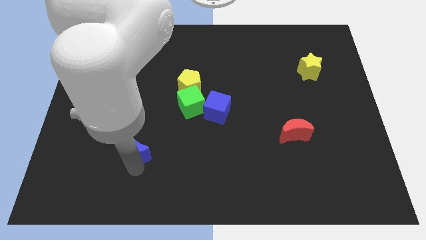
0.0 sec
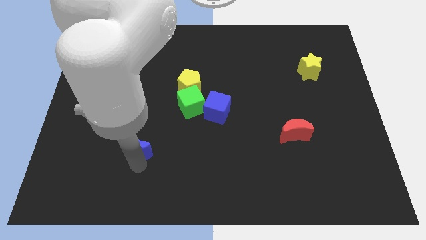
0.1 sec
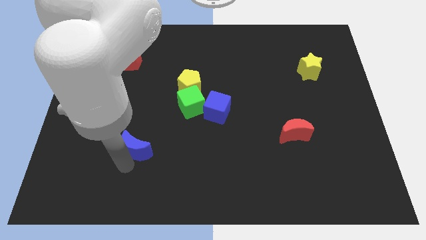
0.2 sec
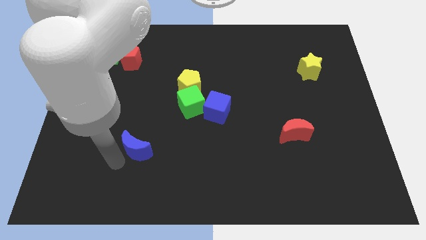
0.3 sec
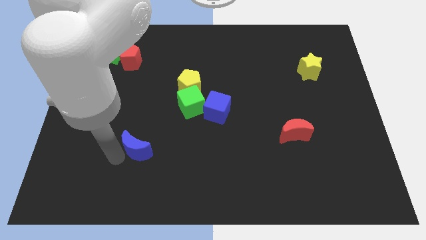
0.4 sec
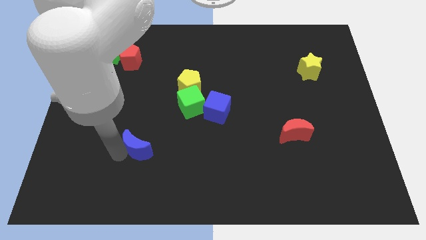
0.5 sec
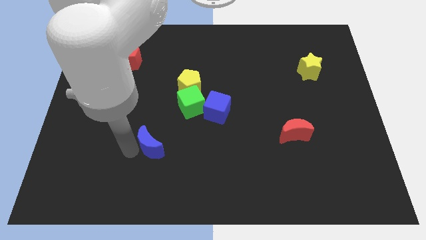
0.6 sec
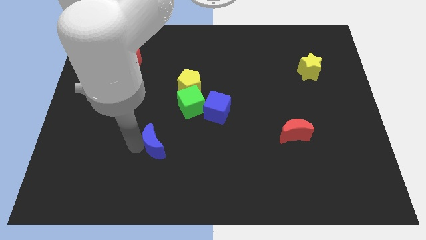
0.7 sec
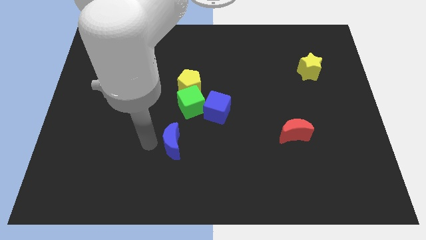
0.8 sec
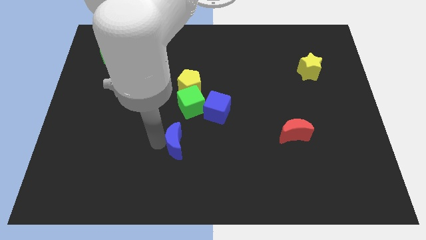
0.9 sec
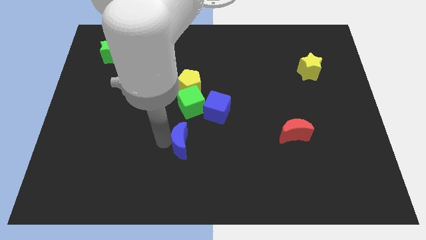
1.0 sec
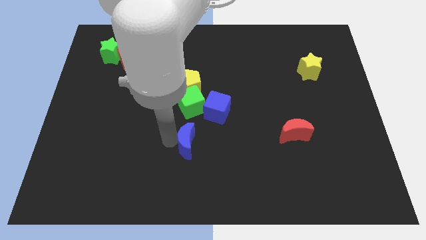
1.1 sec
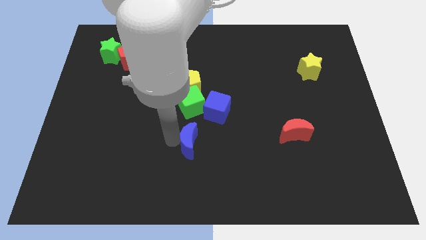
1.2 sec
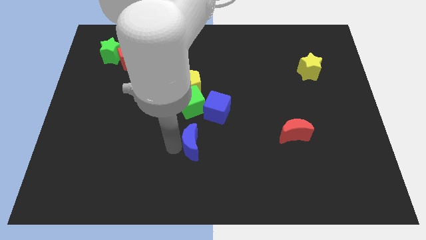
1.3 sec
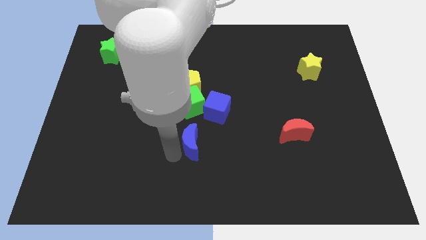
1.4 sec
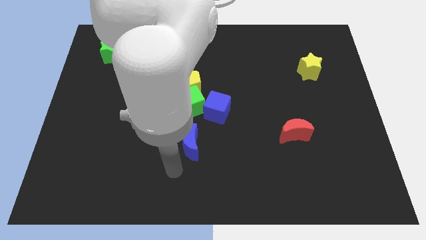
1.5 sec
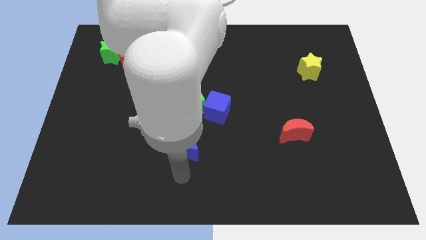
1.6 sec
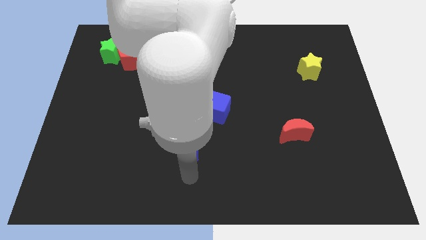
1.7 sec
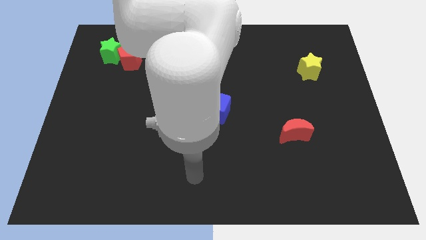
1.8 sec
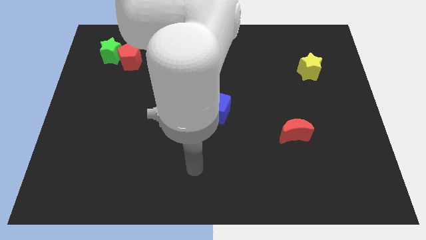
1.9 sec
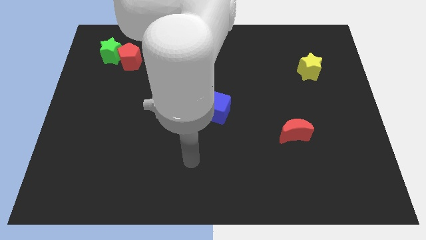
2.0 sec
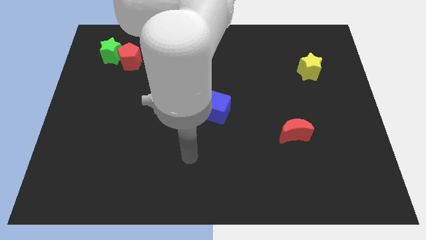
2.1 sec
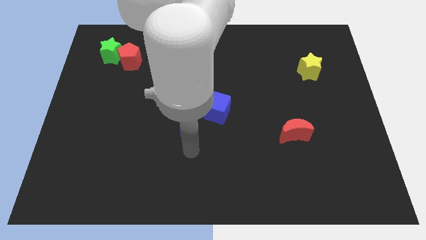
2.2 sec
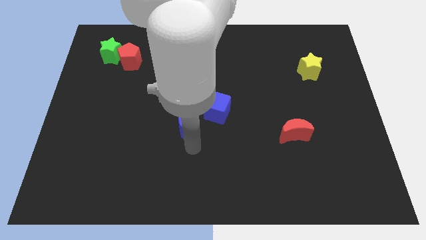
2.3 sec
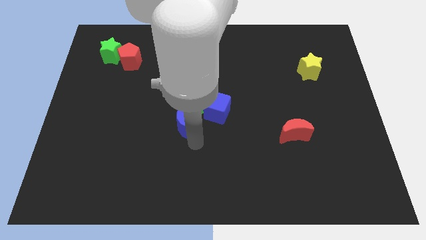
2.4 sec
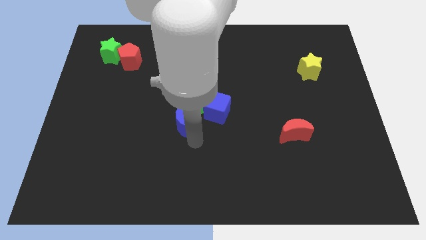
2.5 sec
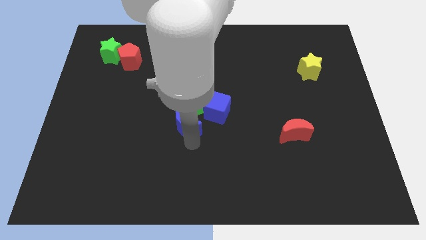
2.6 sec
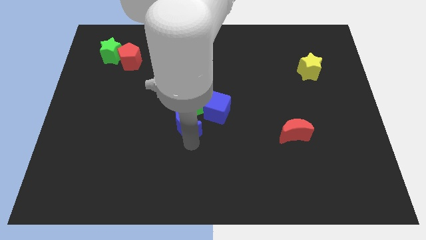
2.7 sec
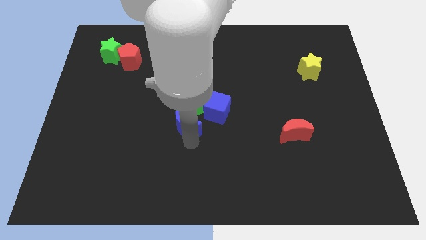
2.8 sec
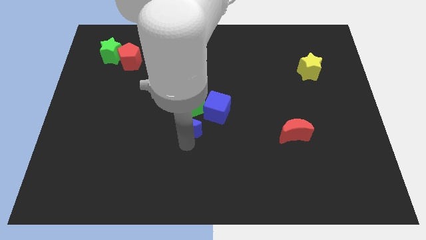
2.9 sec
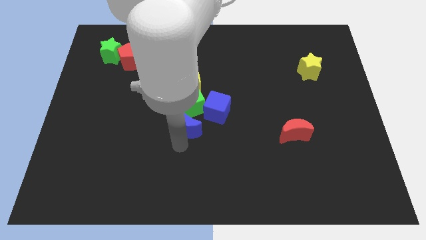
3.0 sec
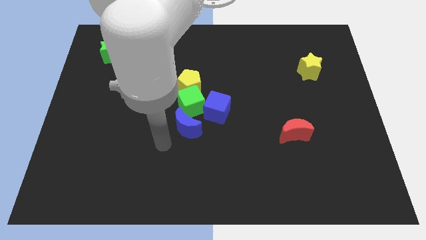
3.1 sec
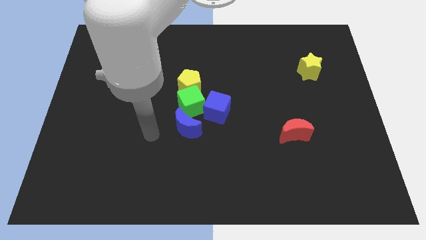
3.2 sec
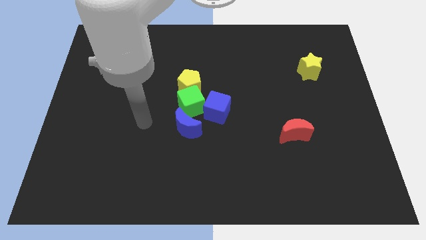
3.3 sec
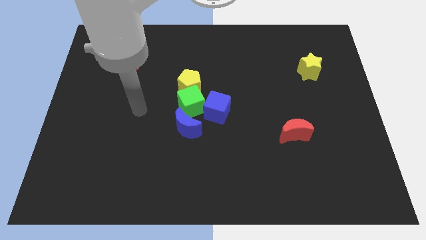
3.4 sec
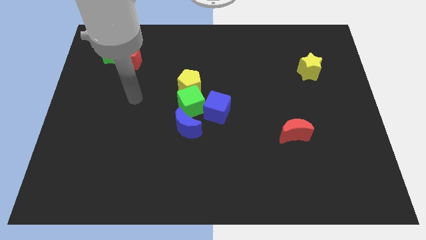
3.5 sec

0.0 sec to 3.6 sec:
push the blue crescent into the green cube

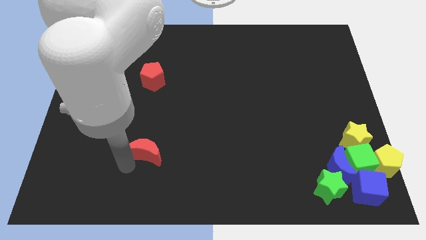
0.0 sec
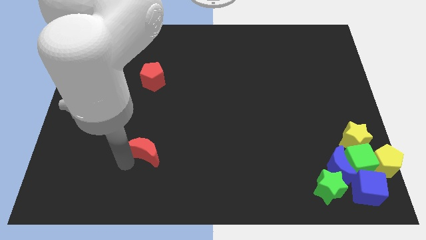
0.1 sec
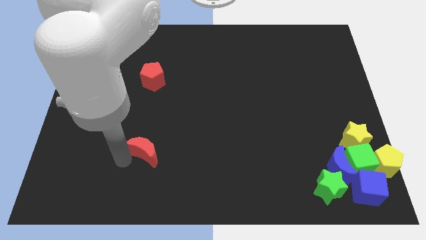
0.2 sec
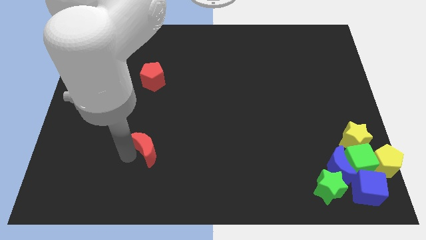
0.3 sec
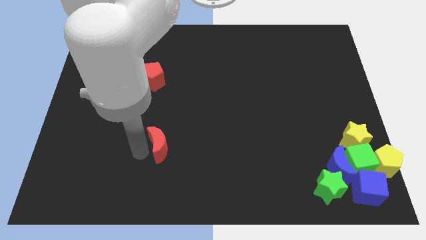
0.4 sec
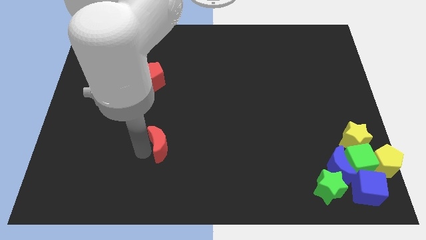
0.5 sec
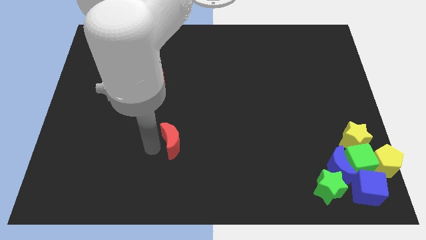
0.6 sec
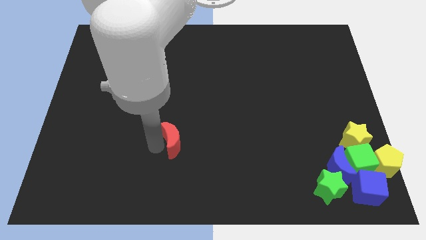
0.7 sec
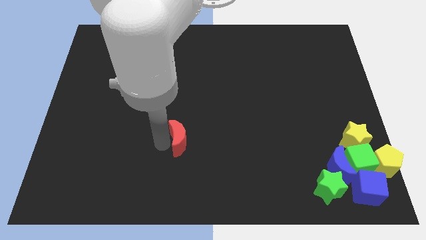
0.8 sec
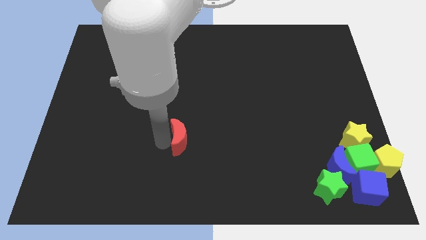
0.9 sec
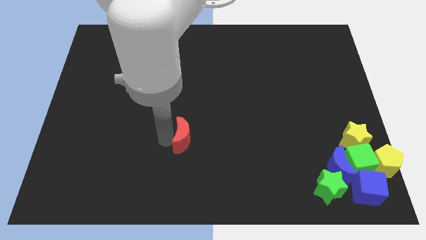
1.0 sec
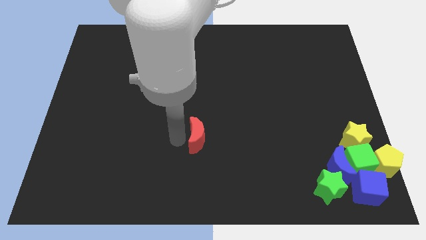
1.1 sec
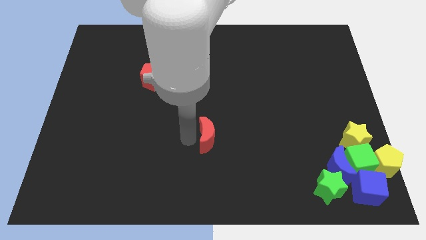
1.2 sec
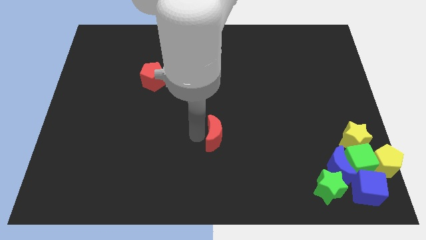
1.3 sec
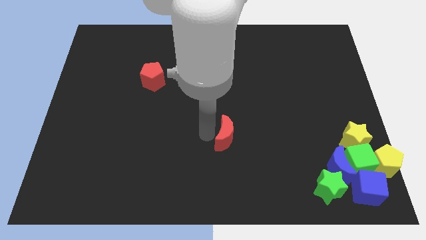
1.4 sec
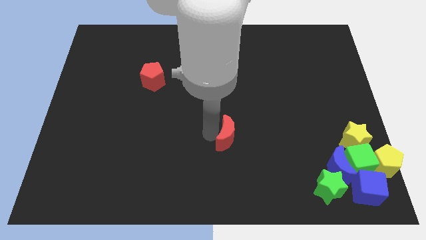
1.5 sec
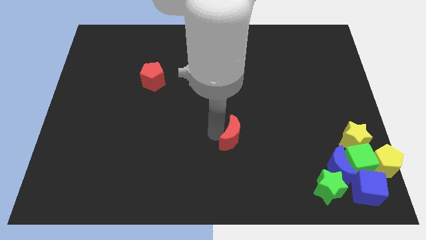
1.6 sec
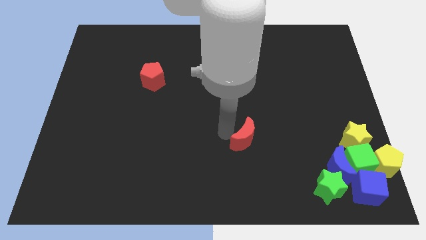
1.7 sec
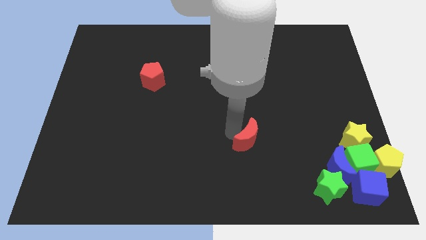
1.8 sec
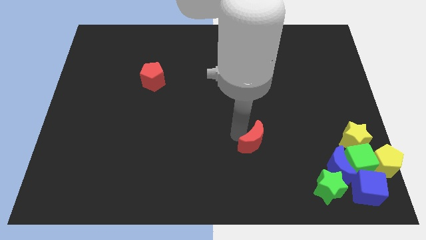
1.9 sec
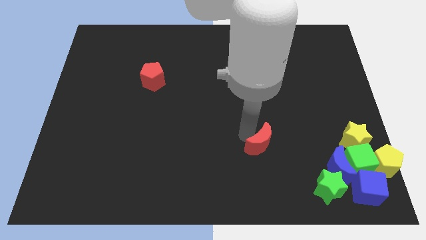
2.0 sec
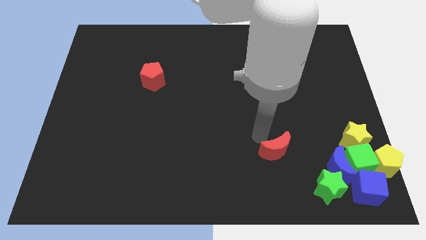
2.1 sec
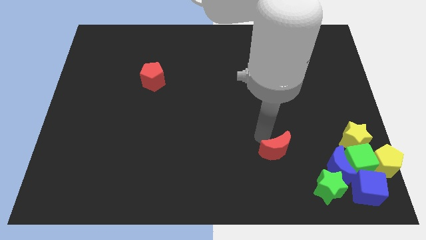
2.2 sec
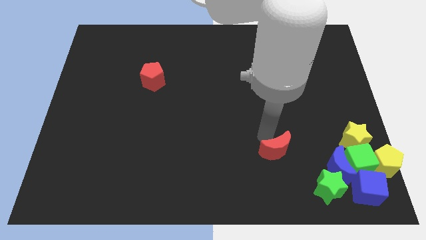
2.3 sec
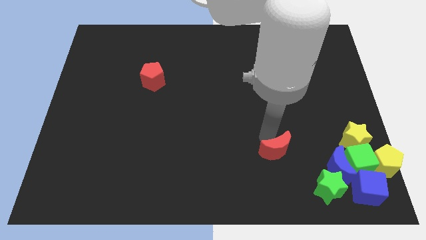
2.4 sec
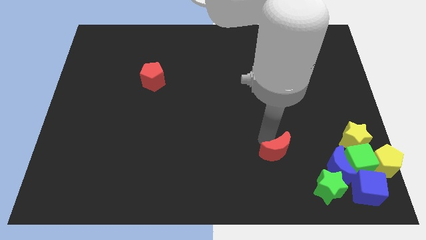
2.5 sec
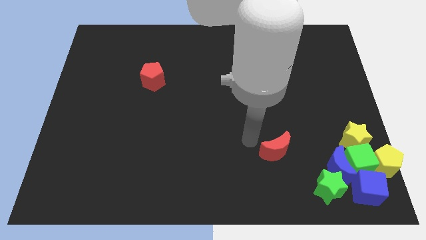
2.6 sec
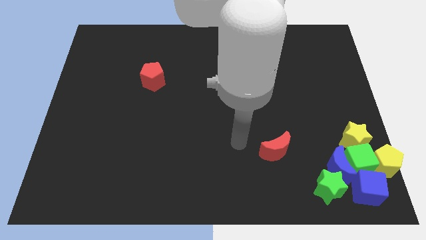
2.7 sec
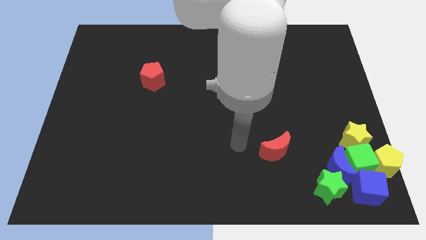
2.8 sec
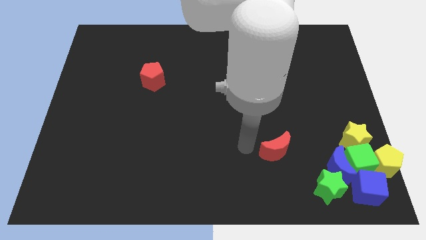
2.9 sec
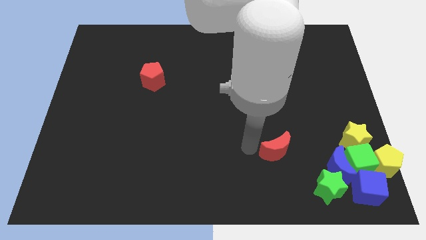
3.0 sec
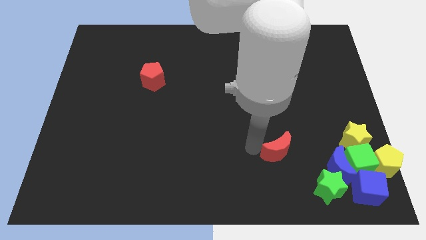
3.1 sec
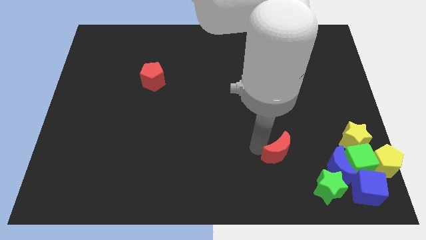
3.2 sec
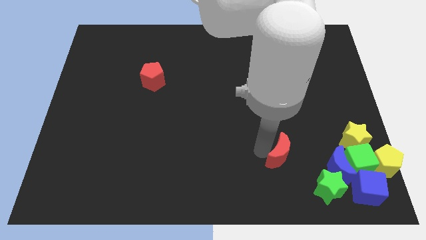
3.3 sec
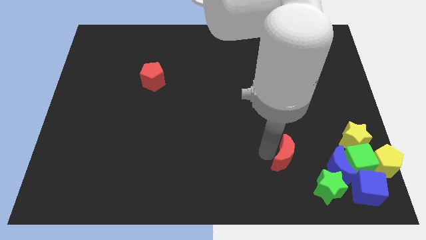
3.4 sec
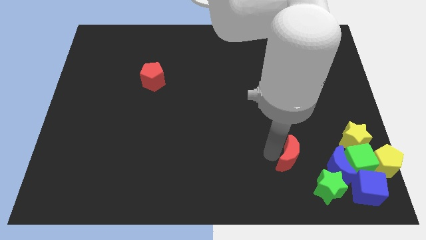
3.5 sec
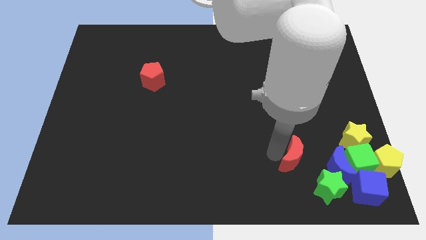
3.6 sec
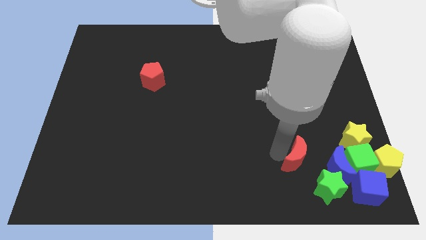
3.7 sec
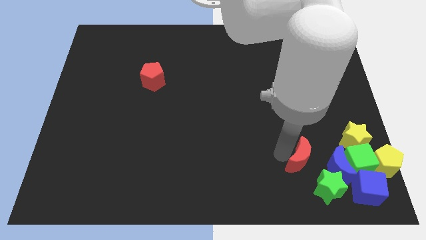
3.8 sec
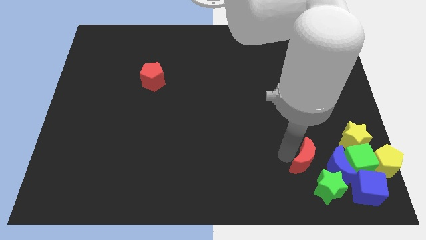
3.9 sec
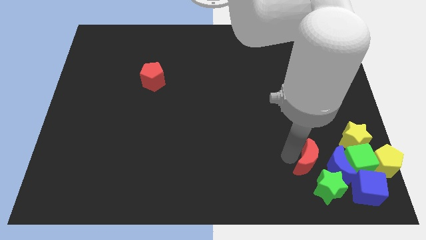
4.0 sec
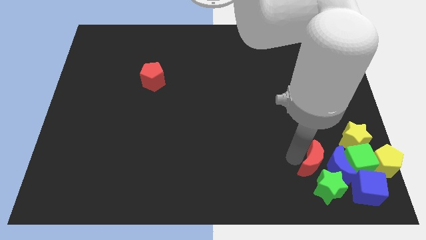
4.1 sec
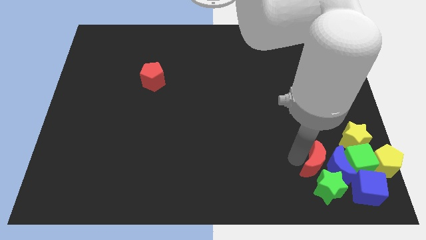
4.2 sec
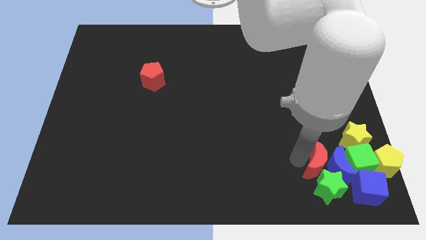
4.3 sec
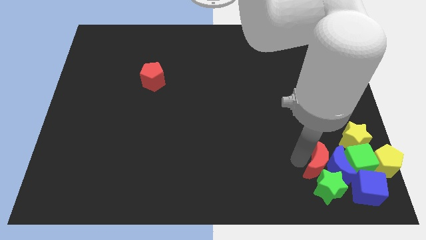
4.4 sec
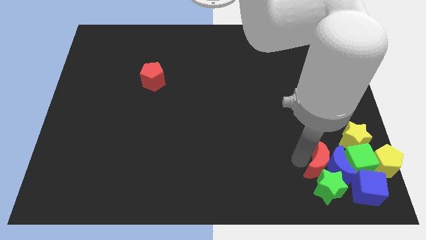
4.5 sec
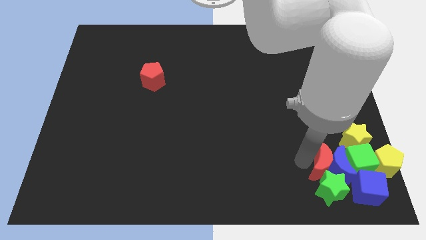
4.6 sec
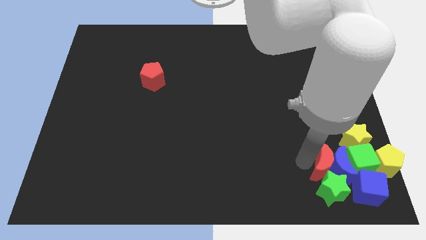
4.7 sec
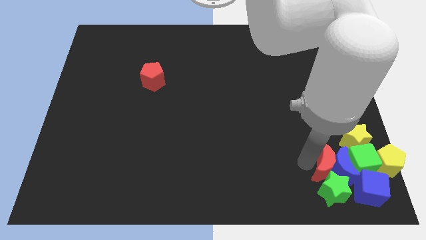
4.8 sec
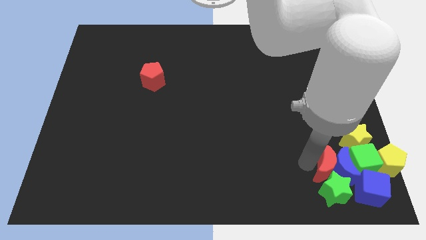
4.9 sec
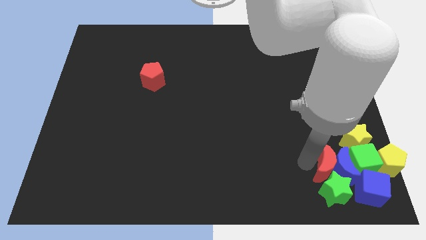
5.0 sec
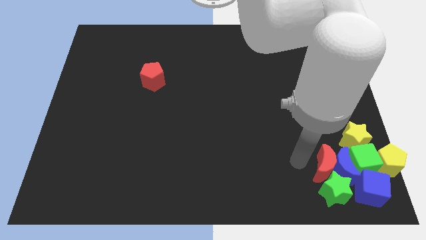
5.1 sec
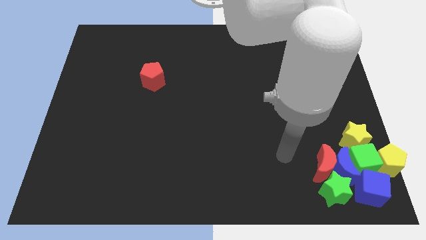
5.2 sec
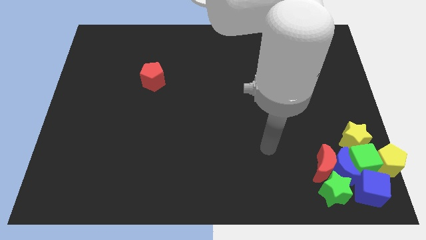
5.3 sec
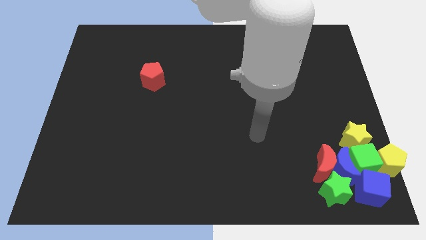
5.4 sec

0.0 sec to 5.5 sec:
move the red moon into a group of blocks

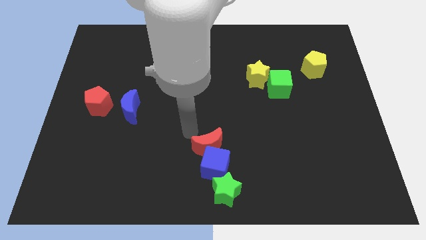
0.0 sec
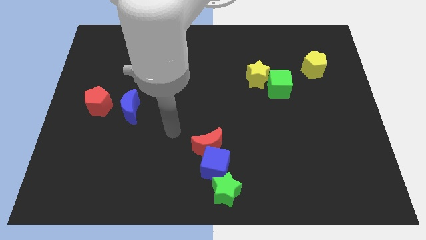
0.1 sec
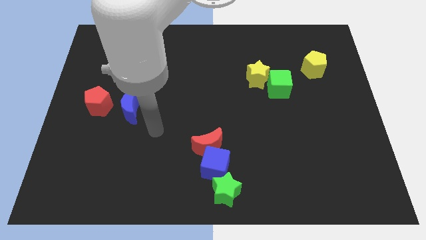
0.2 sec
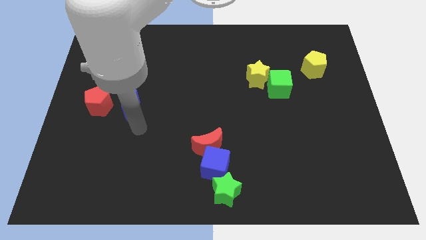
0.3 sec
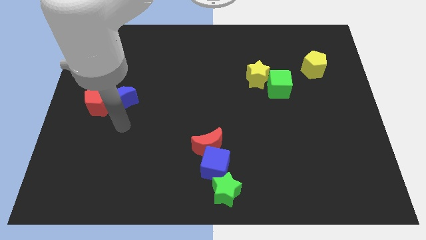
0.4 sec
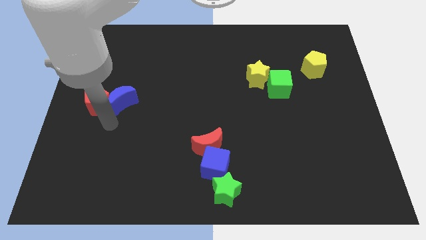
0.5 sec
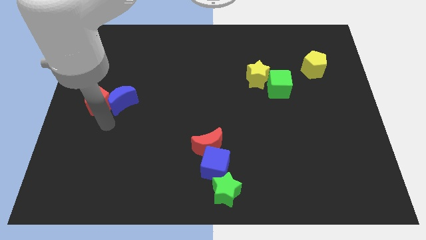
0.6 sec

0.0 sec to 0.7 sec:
put the blue moon and red pentagon together
